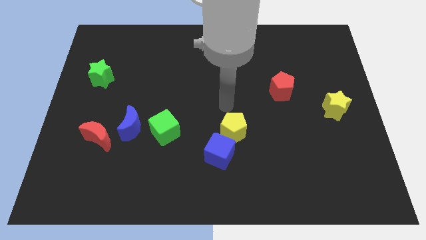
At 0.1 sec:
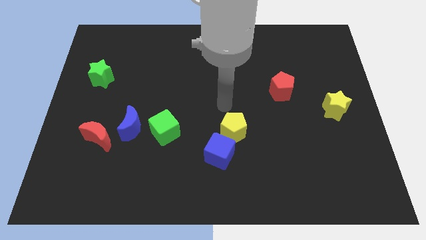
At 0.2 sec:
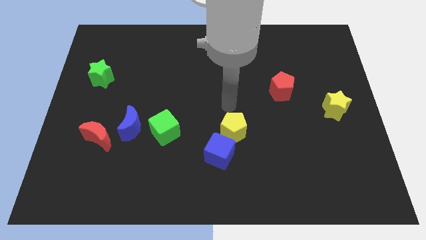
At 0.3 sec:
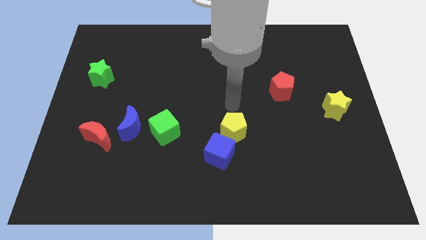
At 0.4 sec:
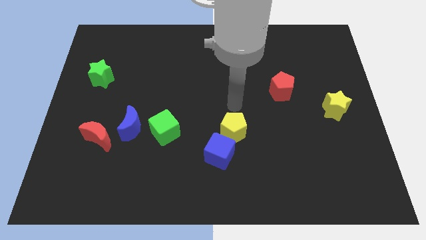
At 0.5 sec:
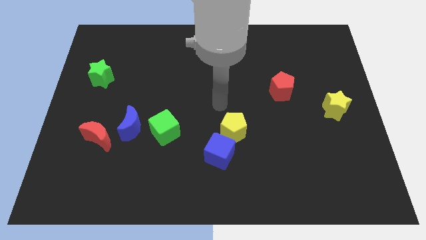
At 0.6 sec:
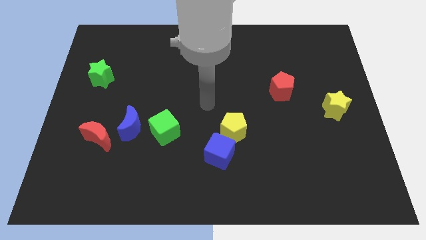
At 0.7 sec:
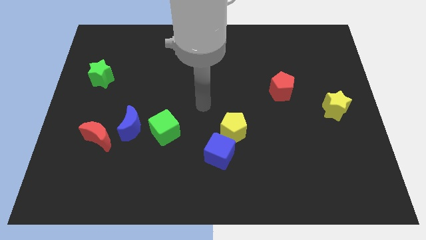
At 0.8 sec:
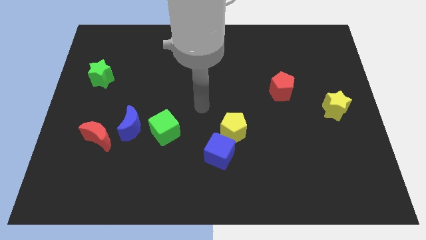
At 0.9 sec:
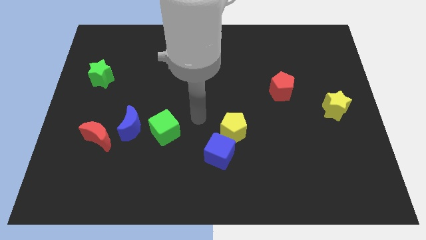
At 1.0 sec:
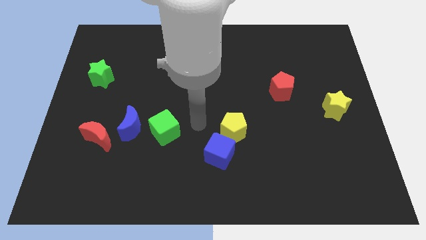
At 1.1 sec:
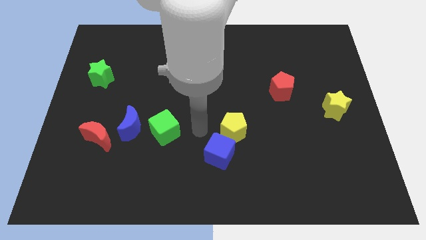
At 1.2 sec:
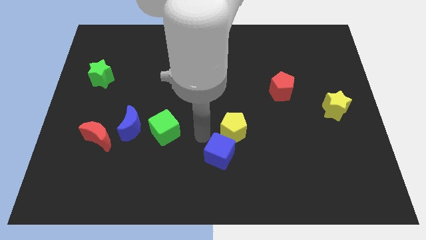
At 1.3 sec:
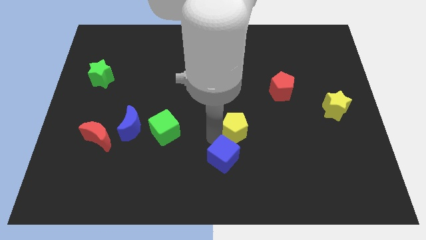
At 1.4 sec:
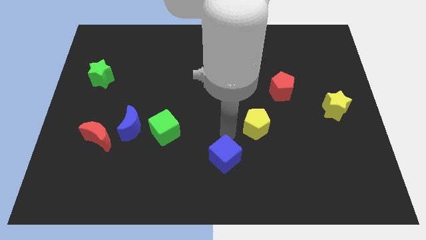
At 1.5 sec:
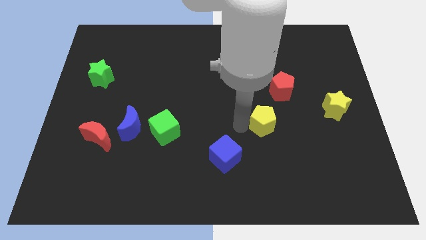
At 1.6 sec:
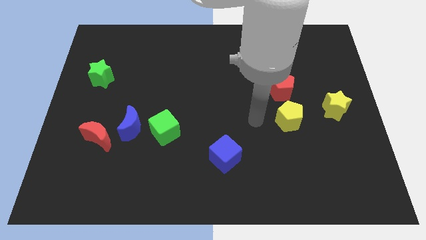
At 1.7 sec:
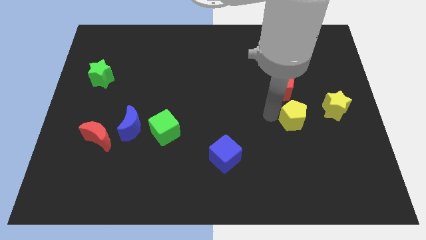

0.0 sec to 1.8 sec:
push the yellow pentagon below the red pentagon

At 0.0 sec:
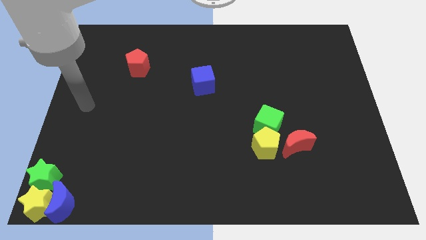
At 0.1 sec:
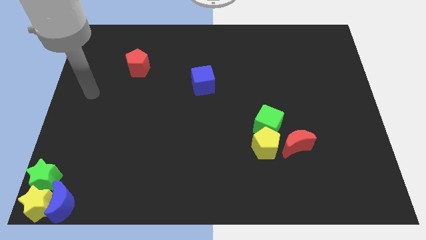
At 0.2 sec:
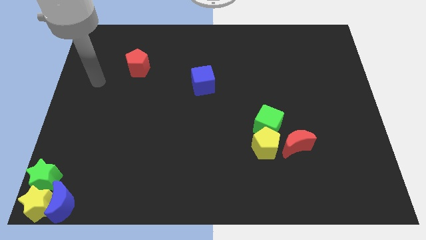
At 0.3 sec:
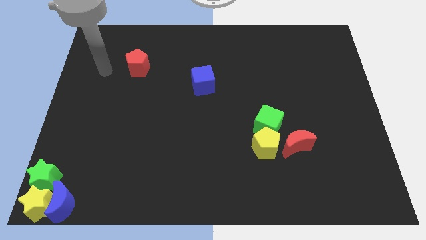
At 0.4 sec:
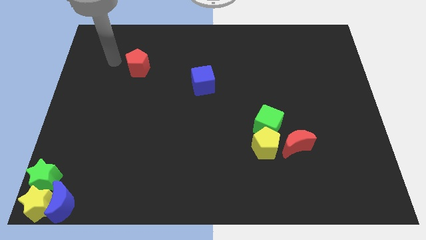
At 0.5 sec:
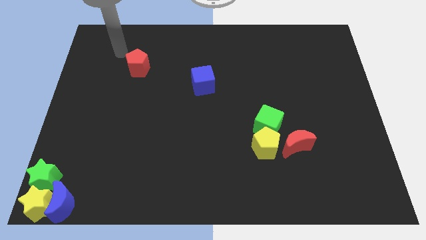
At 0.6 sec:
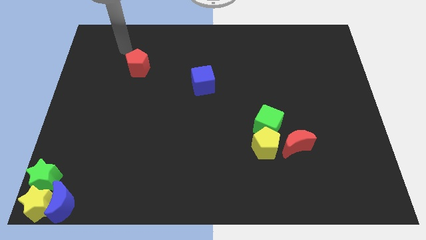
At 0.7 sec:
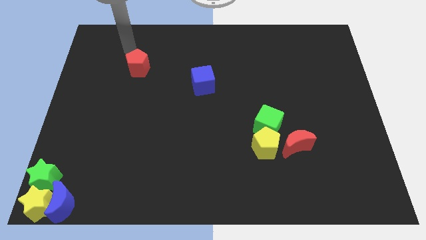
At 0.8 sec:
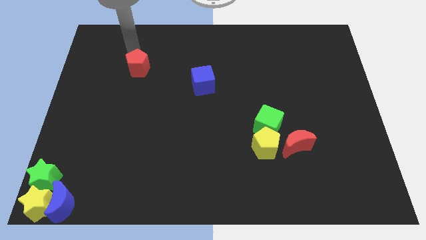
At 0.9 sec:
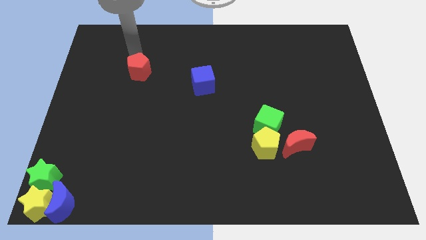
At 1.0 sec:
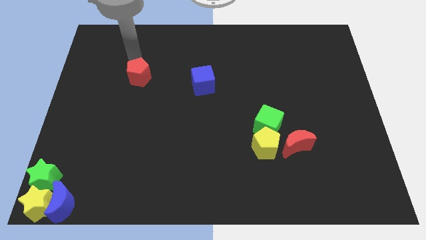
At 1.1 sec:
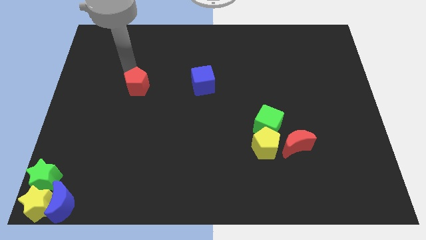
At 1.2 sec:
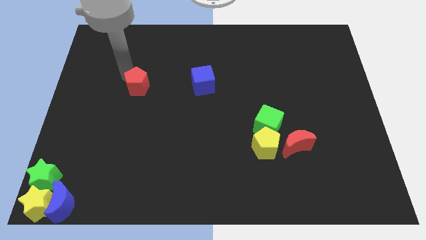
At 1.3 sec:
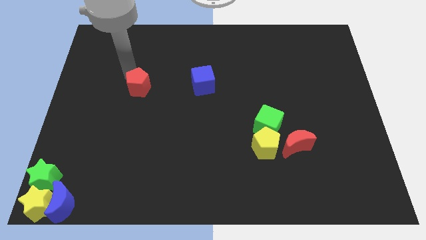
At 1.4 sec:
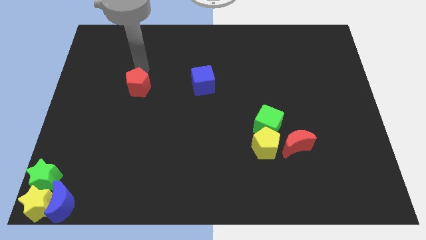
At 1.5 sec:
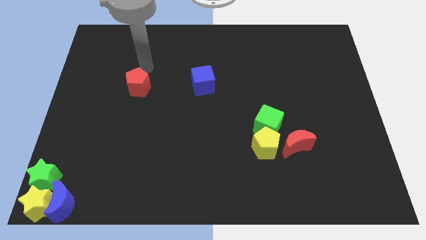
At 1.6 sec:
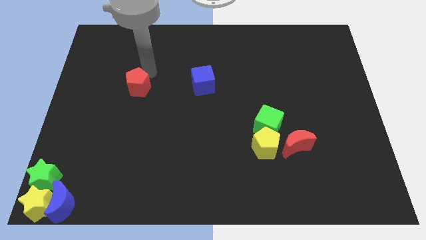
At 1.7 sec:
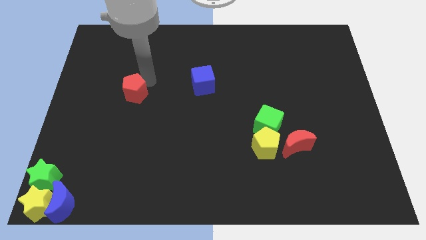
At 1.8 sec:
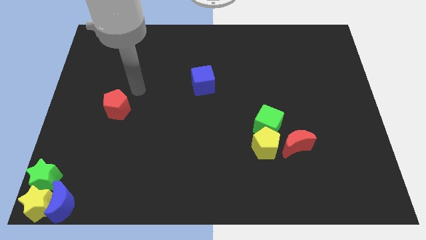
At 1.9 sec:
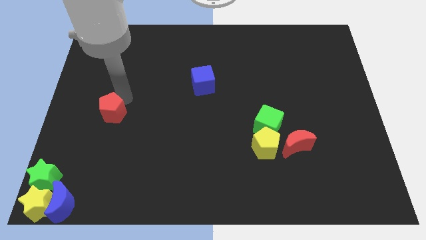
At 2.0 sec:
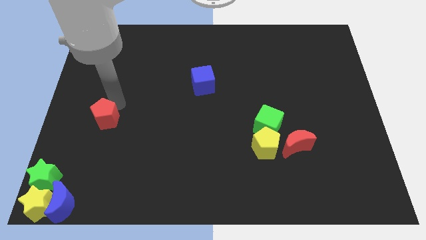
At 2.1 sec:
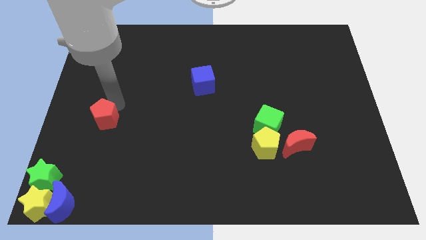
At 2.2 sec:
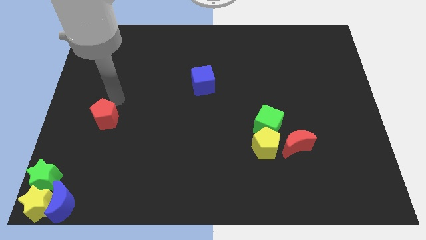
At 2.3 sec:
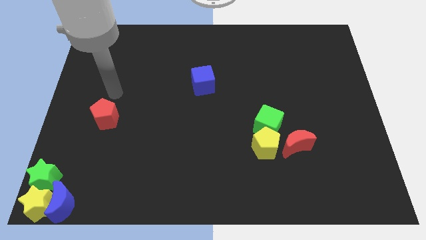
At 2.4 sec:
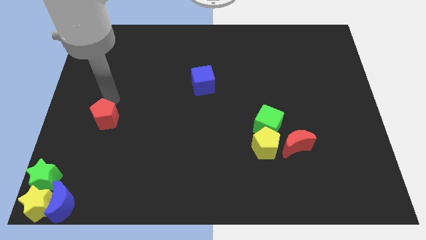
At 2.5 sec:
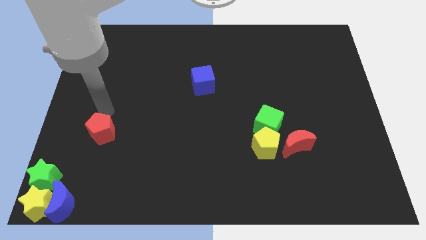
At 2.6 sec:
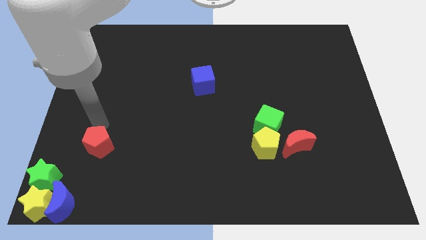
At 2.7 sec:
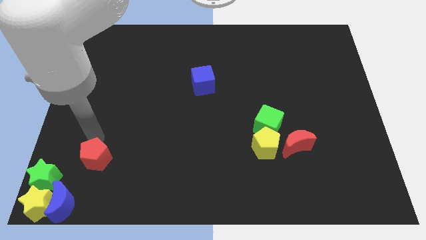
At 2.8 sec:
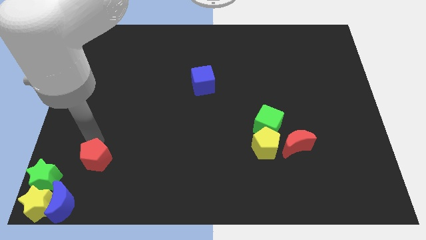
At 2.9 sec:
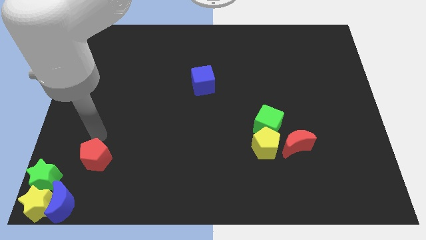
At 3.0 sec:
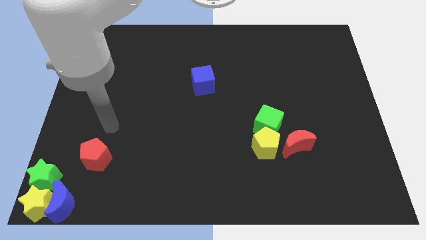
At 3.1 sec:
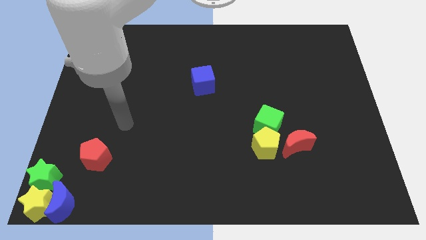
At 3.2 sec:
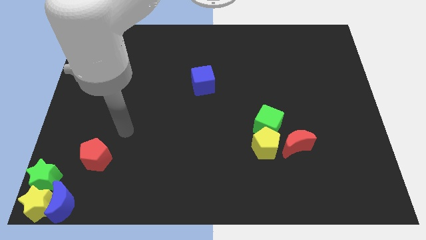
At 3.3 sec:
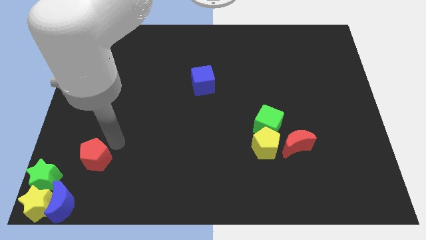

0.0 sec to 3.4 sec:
drag the red pentagon towards the group of blocks at the bottom left side of the board

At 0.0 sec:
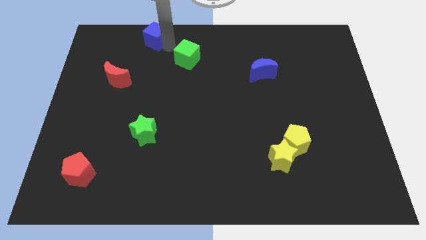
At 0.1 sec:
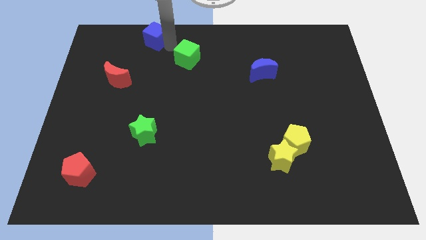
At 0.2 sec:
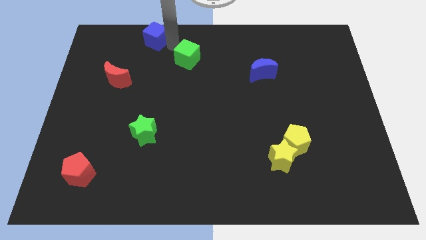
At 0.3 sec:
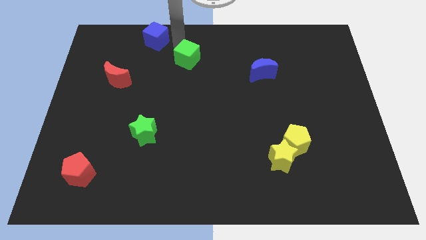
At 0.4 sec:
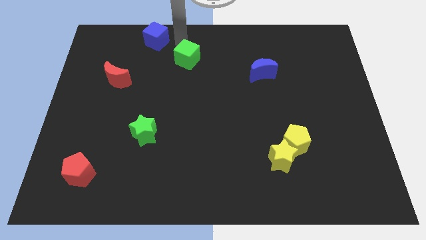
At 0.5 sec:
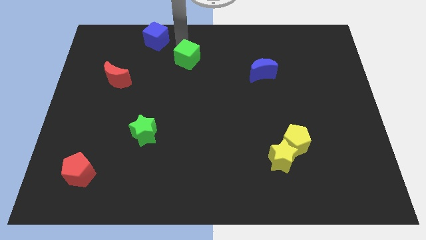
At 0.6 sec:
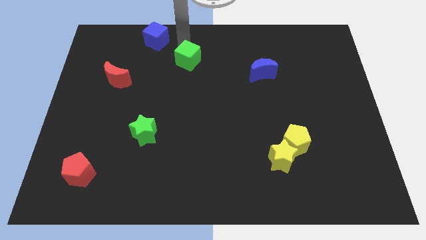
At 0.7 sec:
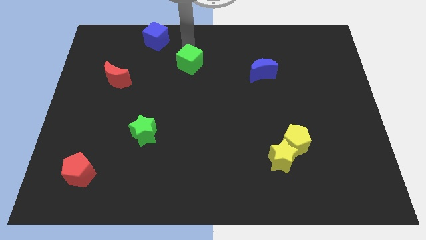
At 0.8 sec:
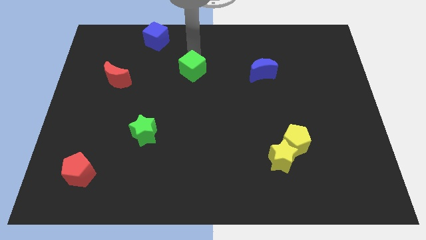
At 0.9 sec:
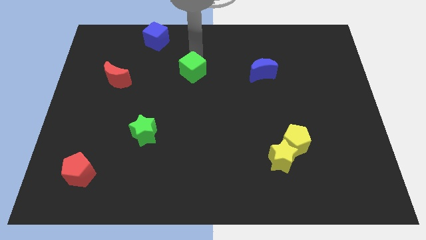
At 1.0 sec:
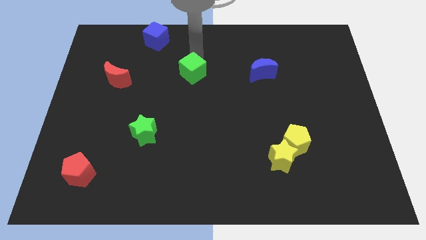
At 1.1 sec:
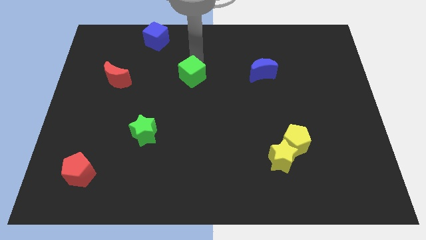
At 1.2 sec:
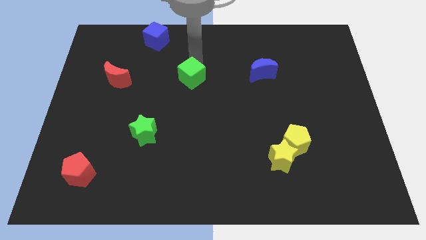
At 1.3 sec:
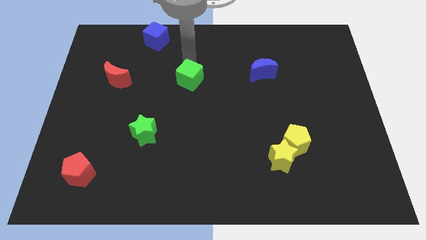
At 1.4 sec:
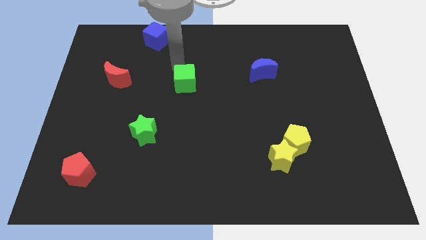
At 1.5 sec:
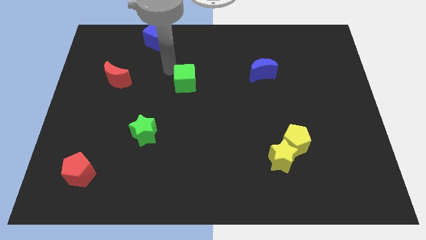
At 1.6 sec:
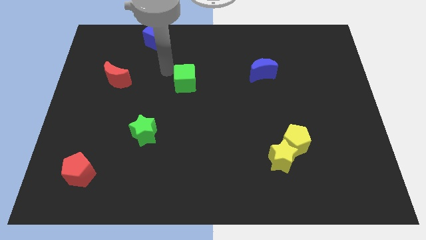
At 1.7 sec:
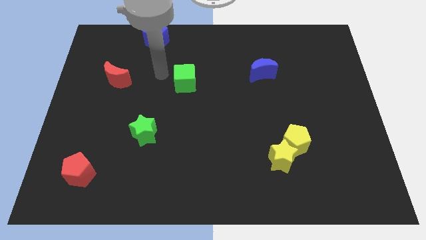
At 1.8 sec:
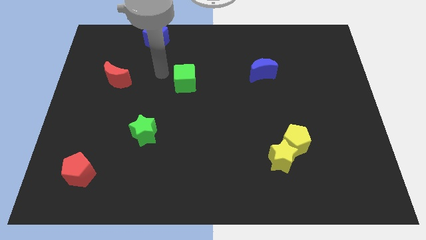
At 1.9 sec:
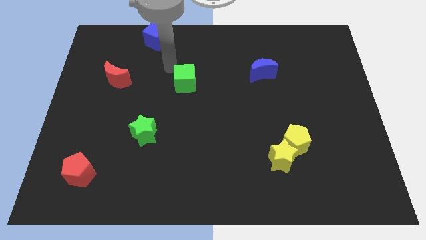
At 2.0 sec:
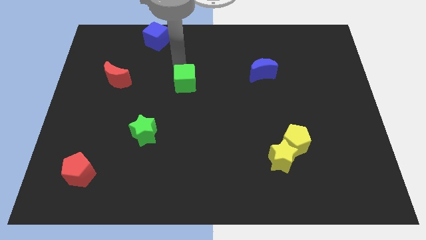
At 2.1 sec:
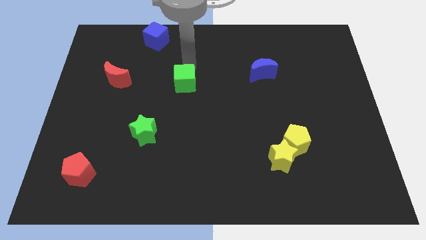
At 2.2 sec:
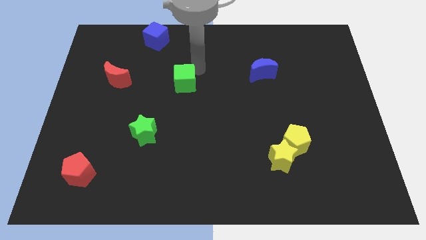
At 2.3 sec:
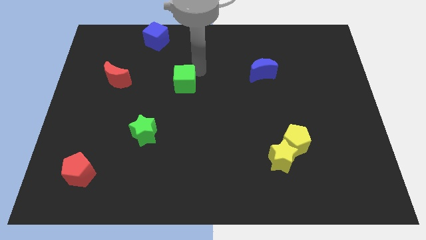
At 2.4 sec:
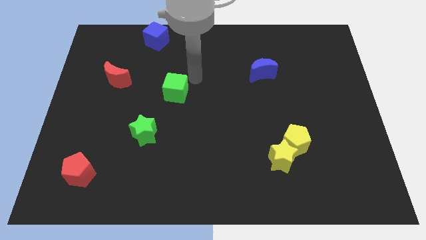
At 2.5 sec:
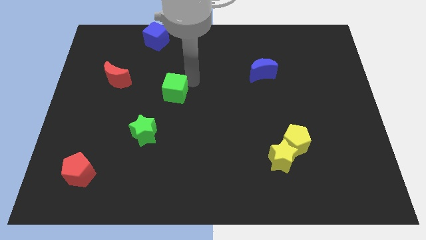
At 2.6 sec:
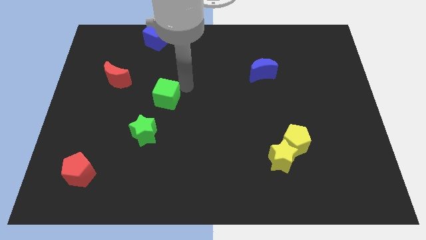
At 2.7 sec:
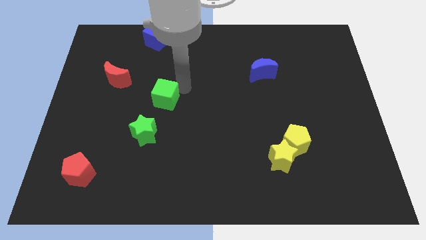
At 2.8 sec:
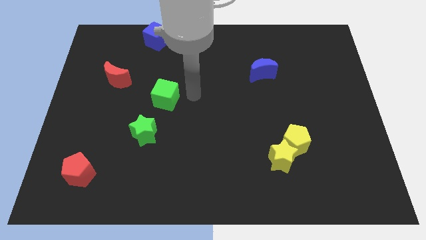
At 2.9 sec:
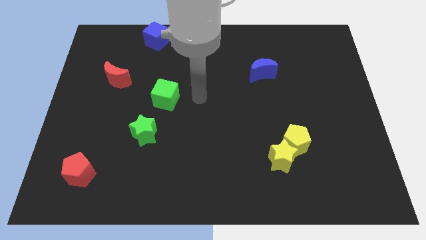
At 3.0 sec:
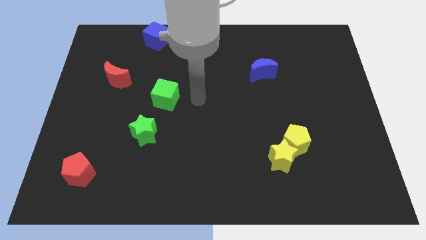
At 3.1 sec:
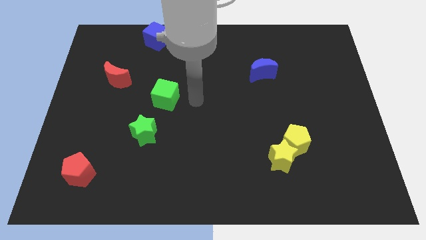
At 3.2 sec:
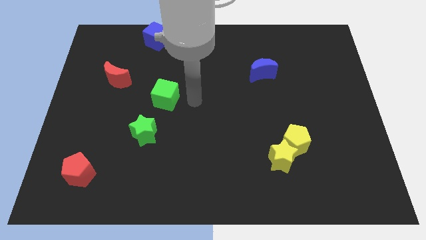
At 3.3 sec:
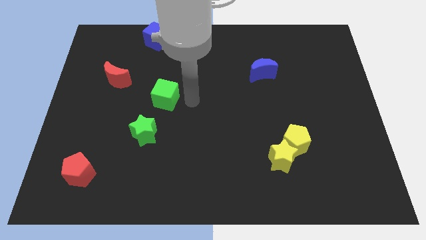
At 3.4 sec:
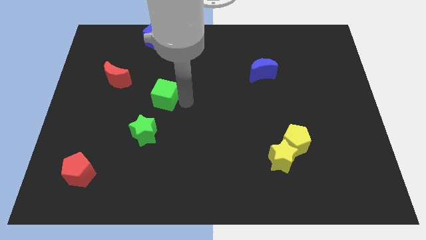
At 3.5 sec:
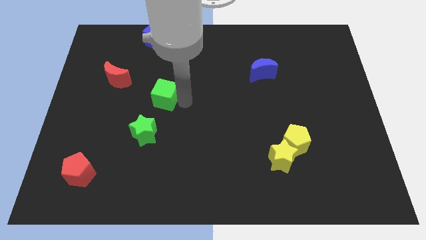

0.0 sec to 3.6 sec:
push green cube towards green star

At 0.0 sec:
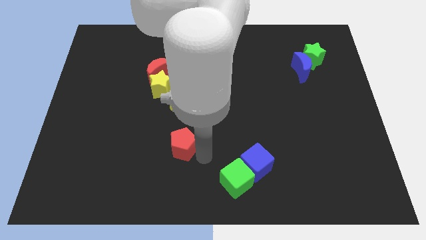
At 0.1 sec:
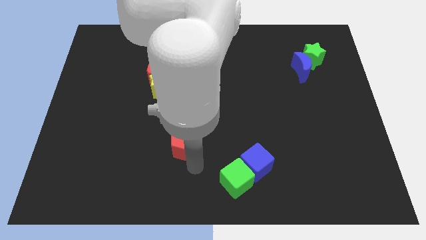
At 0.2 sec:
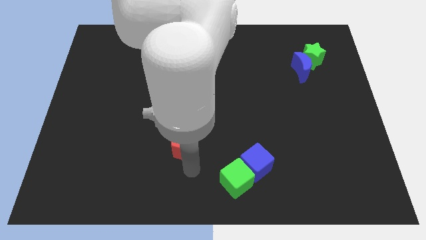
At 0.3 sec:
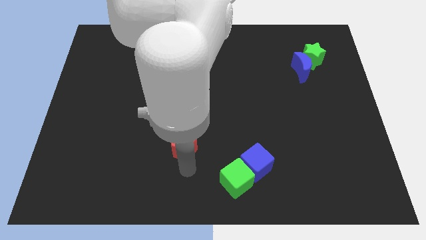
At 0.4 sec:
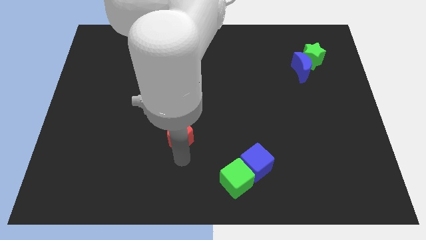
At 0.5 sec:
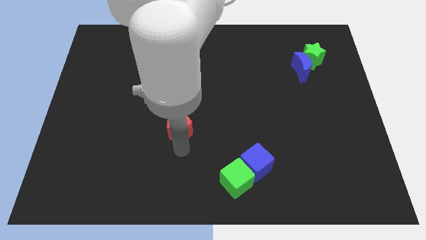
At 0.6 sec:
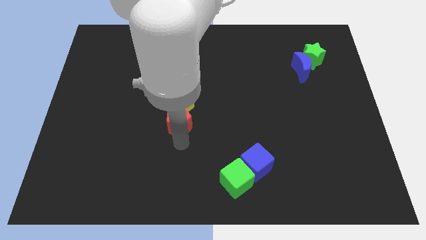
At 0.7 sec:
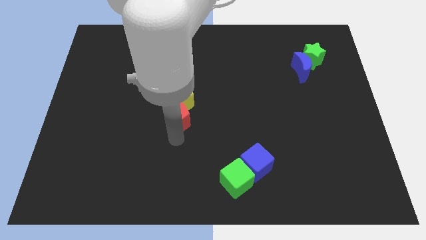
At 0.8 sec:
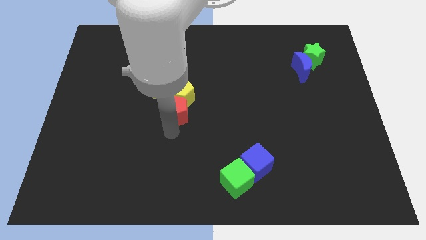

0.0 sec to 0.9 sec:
push the red pentagon towards the bottom of the yellow pentagon